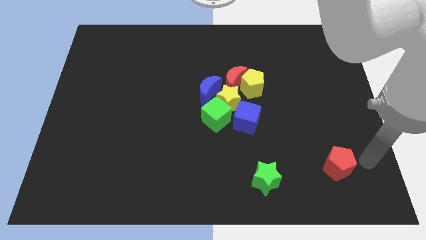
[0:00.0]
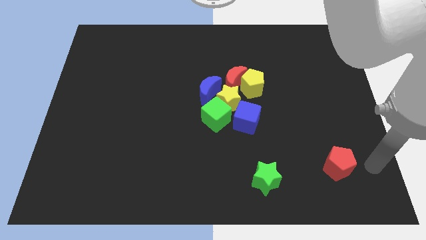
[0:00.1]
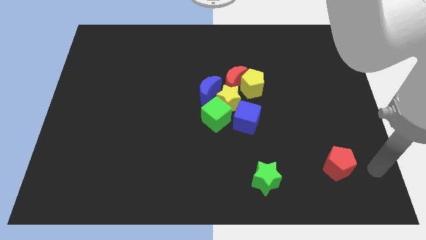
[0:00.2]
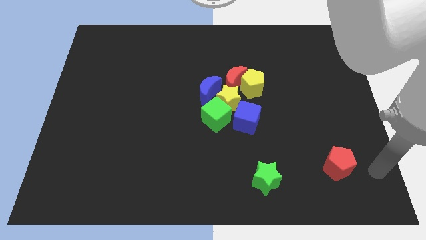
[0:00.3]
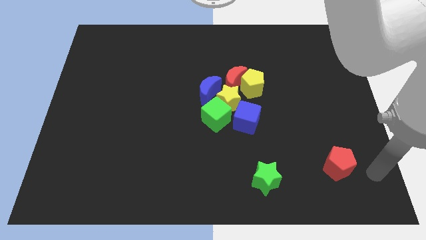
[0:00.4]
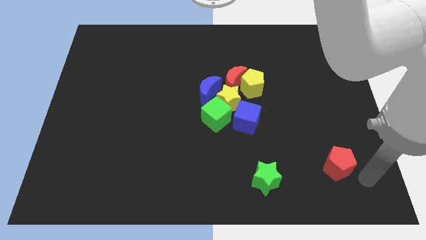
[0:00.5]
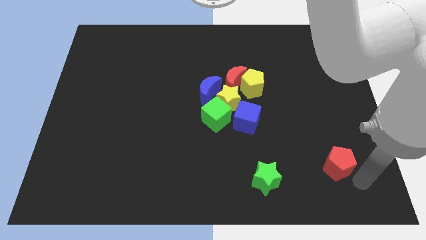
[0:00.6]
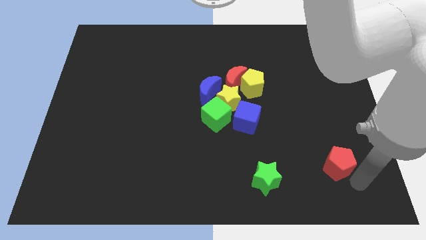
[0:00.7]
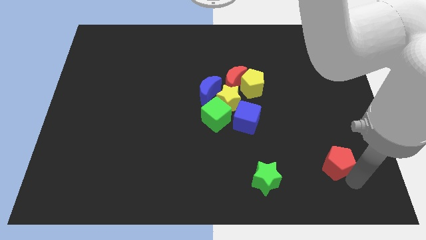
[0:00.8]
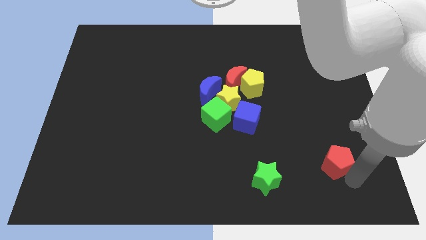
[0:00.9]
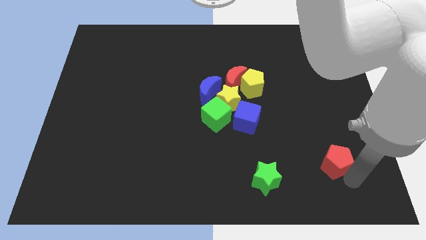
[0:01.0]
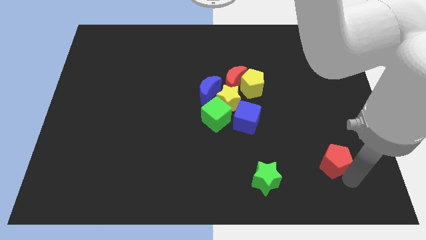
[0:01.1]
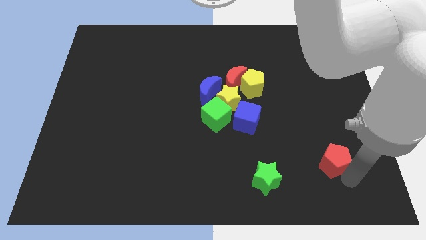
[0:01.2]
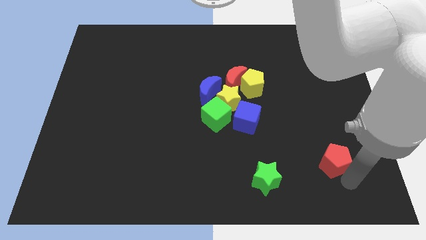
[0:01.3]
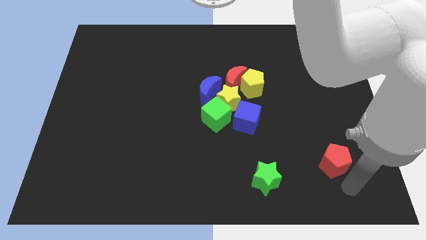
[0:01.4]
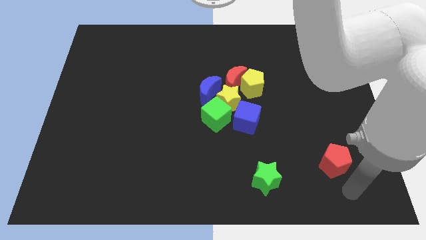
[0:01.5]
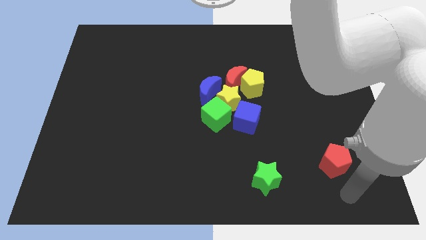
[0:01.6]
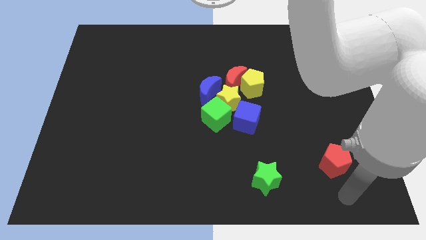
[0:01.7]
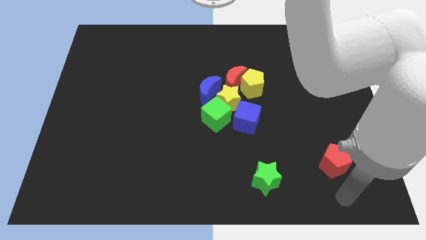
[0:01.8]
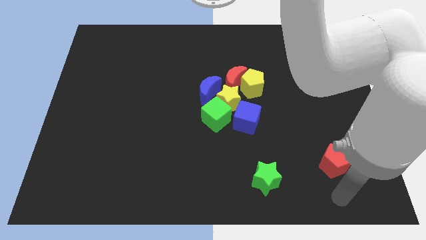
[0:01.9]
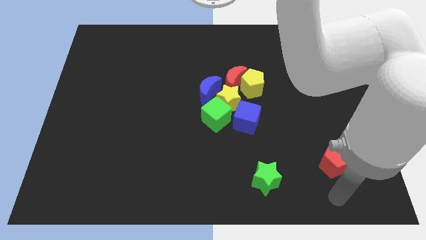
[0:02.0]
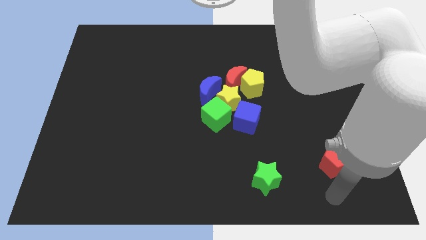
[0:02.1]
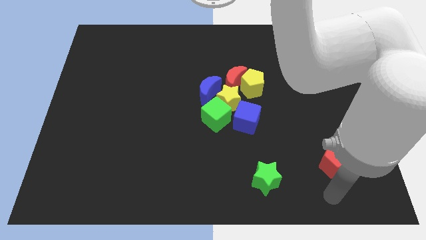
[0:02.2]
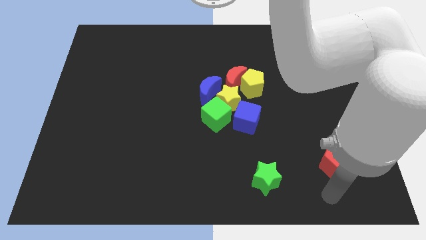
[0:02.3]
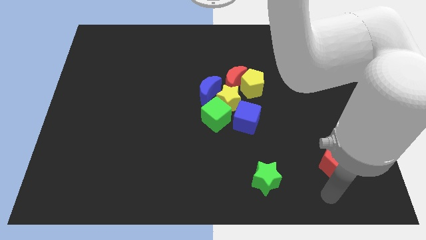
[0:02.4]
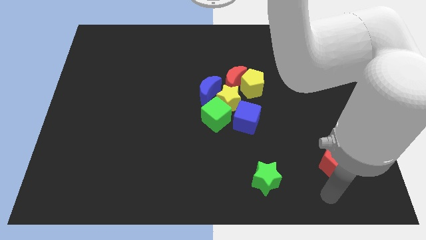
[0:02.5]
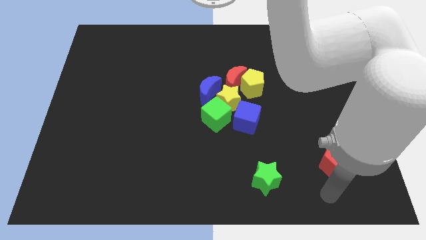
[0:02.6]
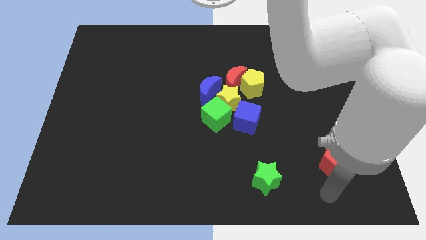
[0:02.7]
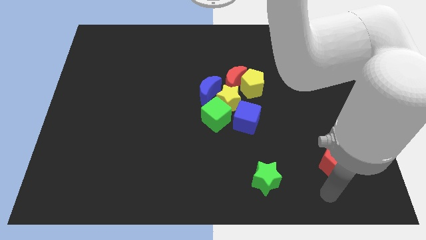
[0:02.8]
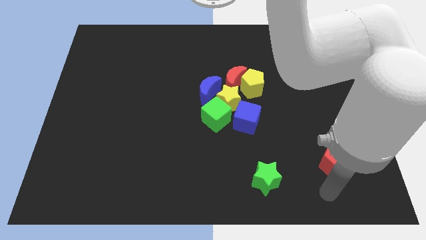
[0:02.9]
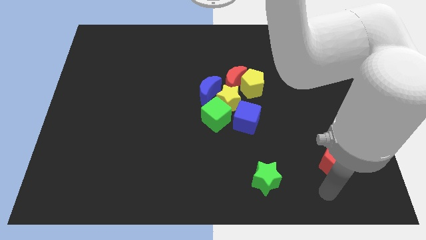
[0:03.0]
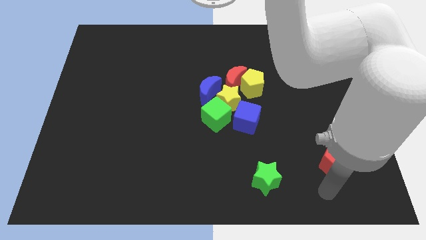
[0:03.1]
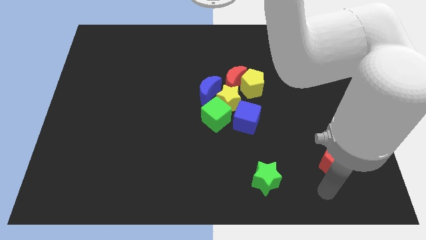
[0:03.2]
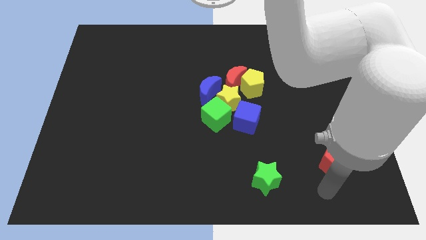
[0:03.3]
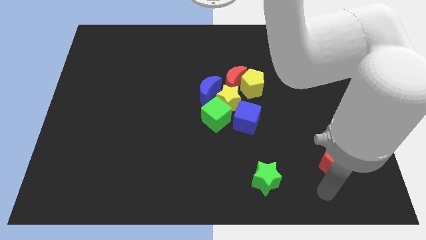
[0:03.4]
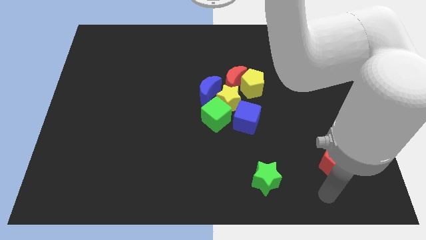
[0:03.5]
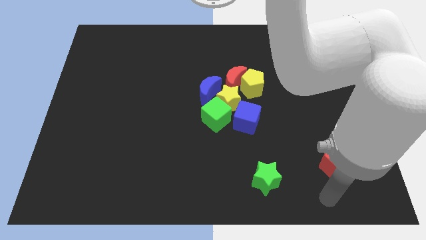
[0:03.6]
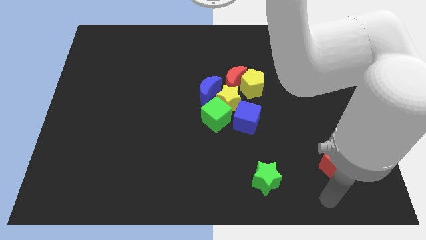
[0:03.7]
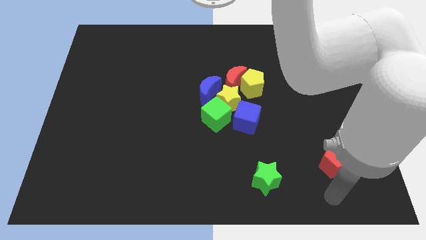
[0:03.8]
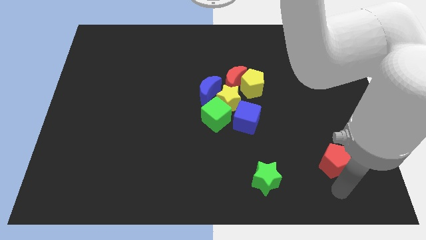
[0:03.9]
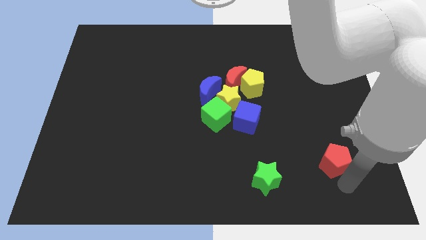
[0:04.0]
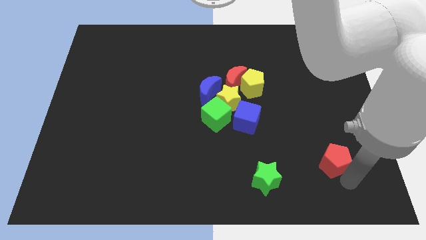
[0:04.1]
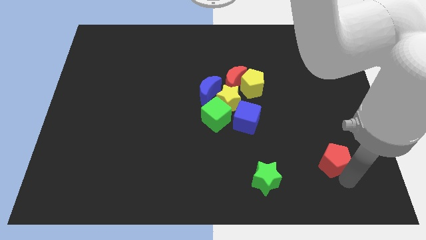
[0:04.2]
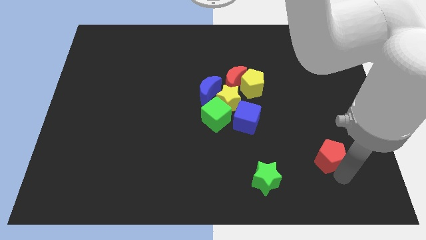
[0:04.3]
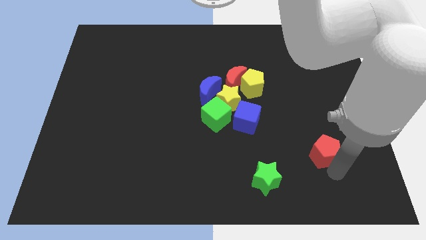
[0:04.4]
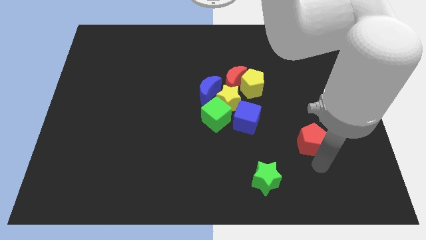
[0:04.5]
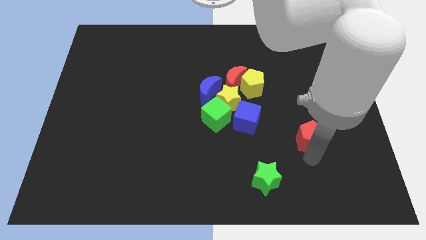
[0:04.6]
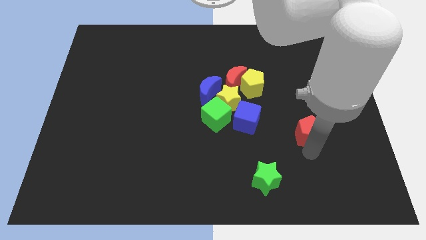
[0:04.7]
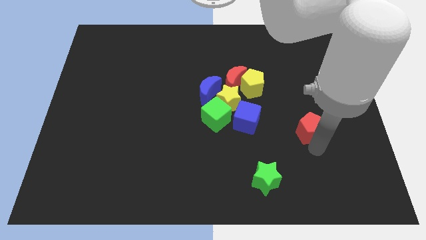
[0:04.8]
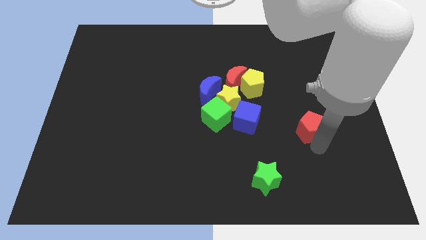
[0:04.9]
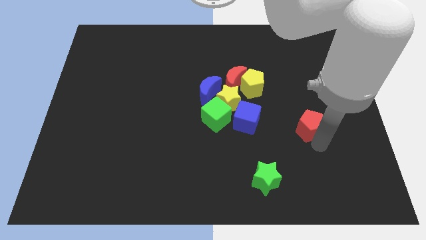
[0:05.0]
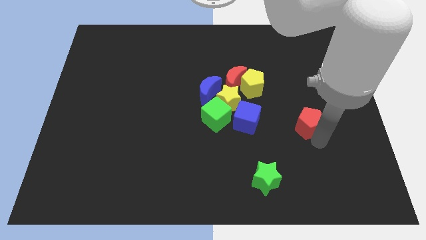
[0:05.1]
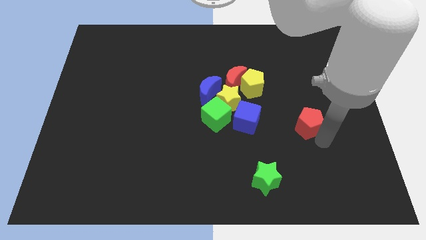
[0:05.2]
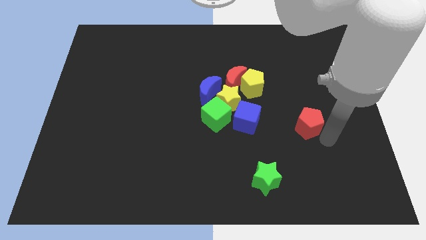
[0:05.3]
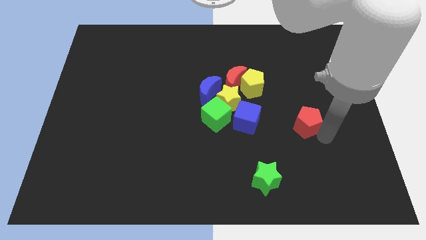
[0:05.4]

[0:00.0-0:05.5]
place the red pentagon to the right of the blue cube

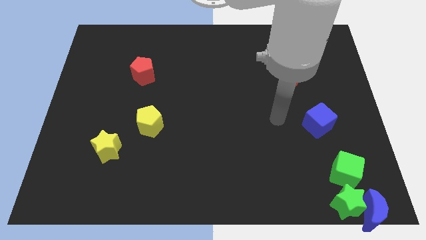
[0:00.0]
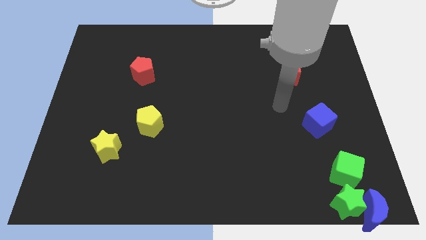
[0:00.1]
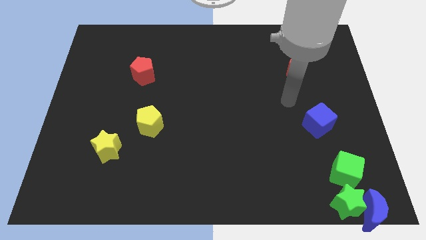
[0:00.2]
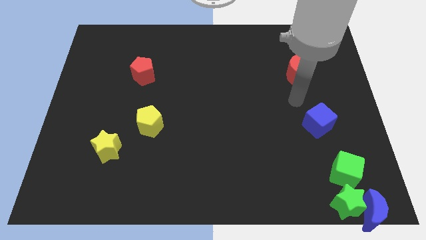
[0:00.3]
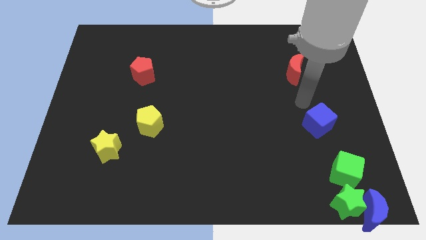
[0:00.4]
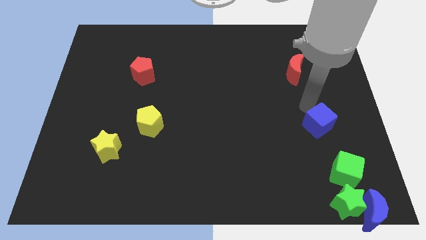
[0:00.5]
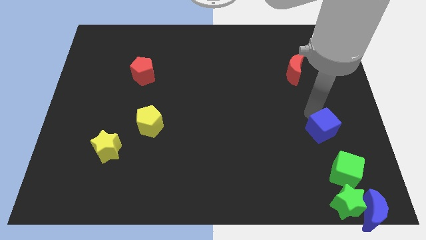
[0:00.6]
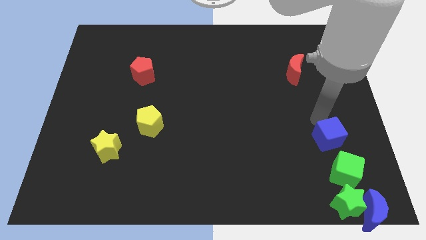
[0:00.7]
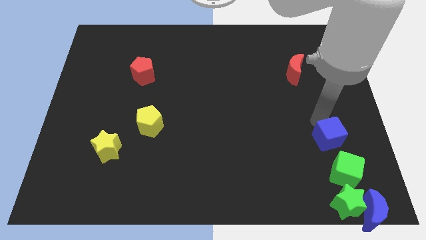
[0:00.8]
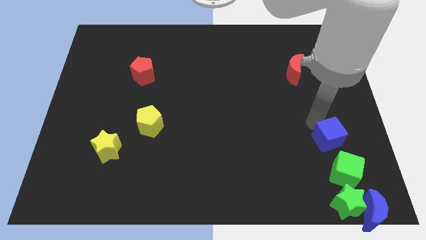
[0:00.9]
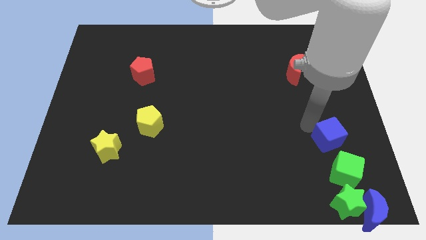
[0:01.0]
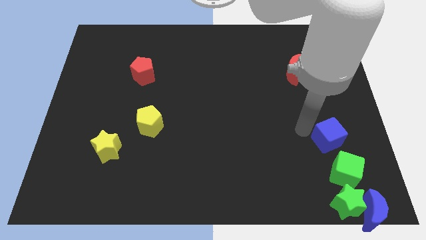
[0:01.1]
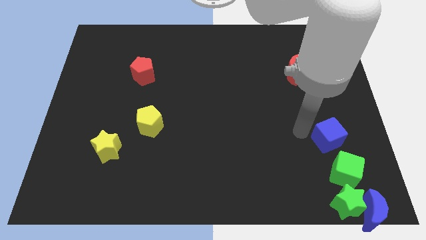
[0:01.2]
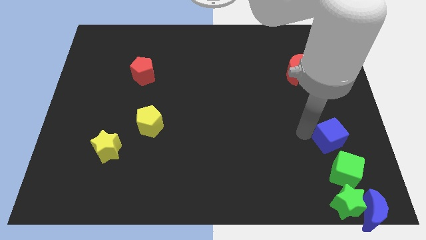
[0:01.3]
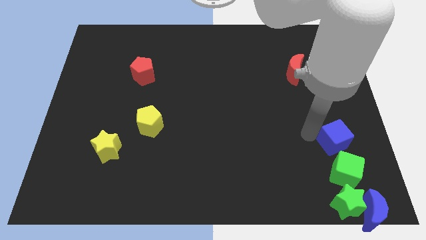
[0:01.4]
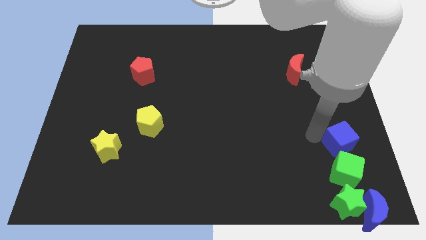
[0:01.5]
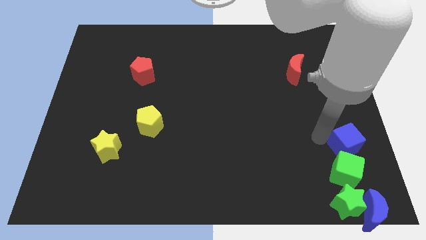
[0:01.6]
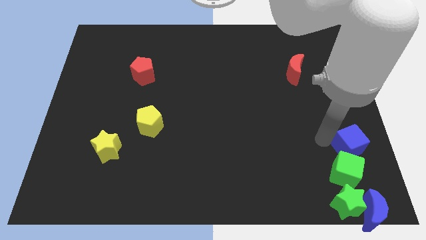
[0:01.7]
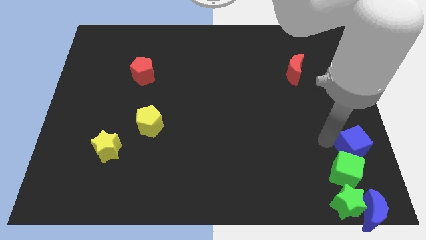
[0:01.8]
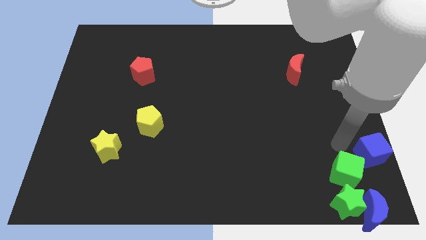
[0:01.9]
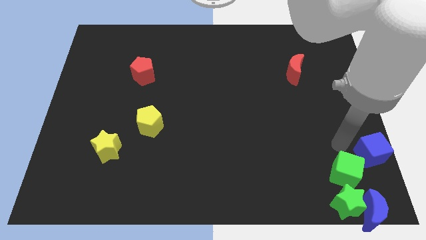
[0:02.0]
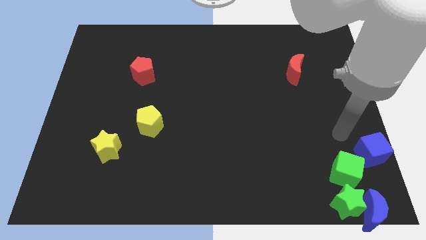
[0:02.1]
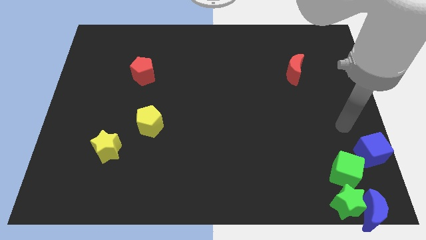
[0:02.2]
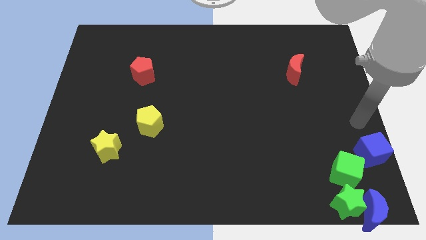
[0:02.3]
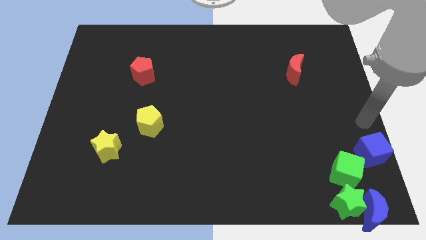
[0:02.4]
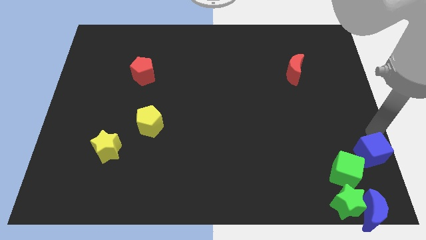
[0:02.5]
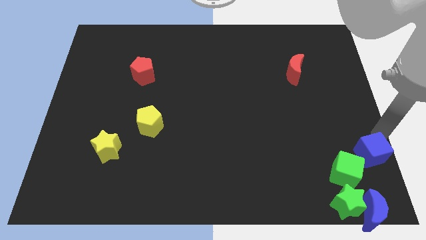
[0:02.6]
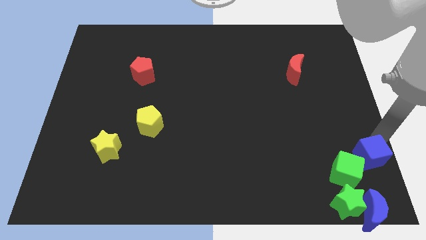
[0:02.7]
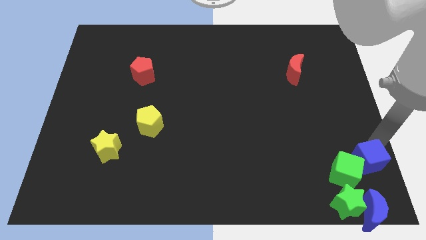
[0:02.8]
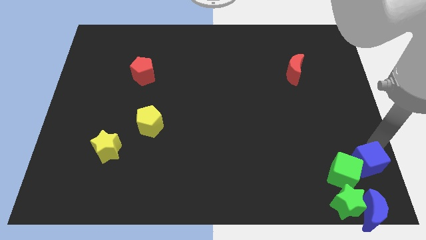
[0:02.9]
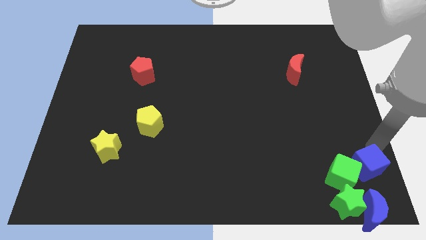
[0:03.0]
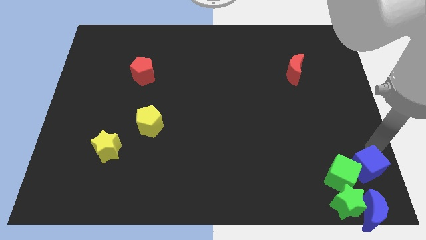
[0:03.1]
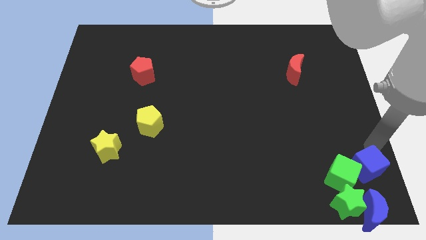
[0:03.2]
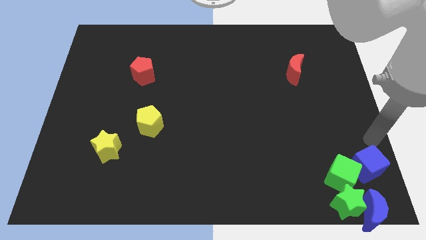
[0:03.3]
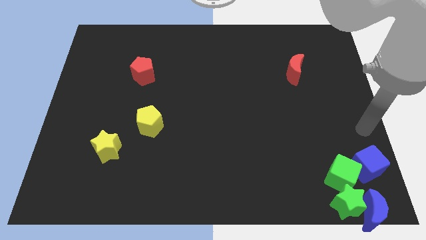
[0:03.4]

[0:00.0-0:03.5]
move the blue cube into the green cube
